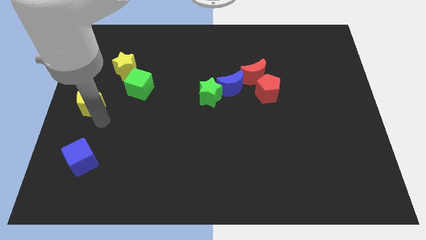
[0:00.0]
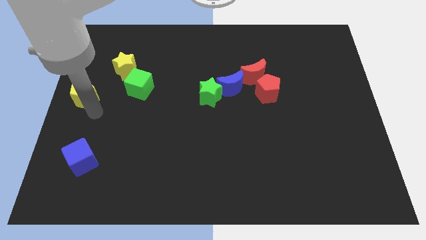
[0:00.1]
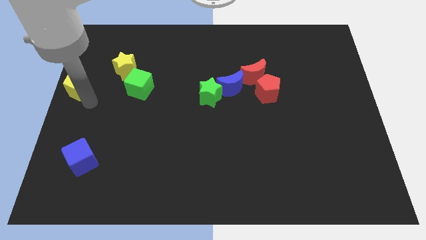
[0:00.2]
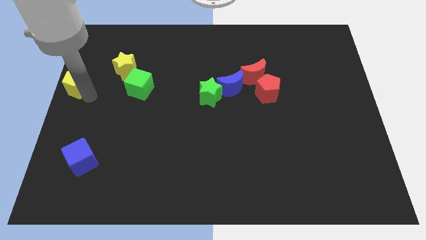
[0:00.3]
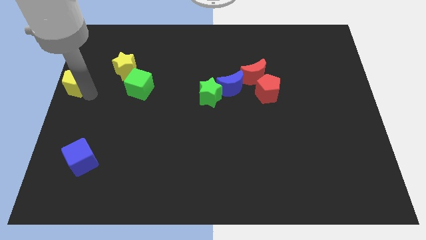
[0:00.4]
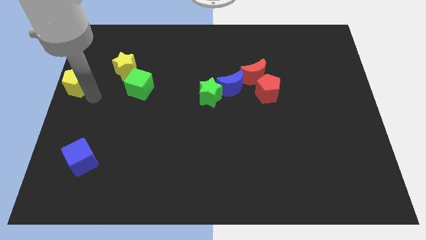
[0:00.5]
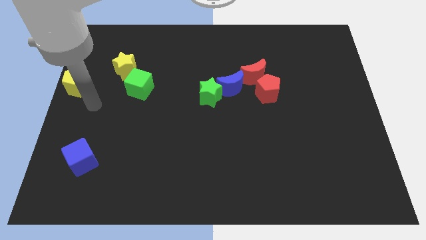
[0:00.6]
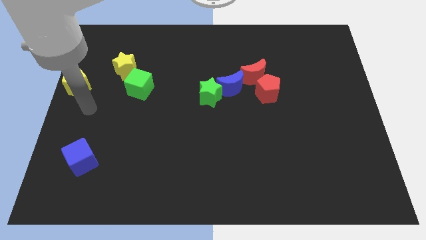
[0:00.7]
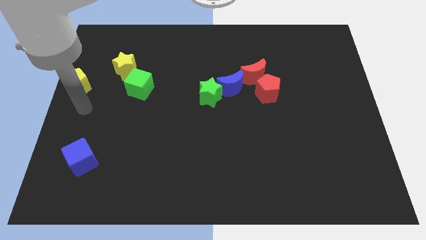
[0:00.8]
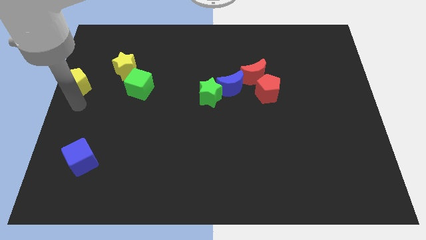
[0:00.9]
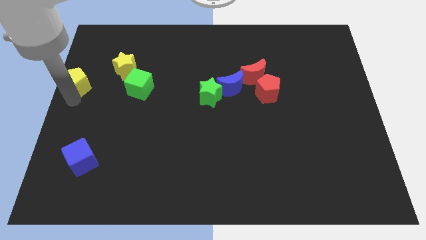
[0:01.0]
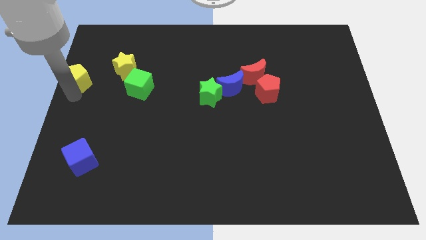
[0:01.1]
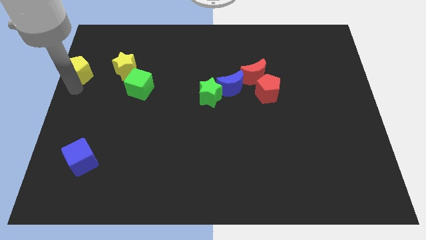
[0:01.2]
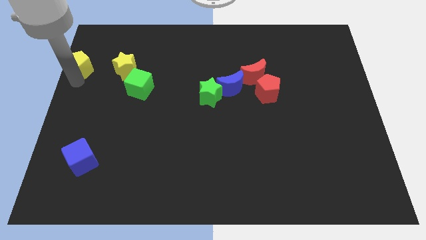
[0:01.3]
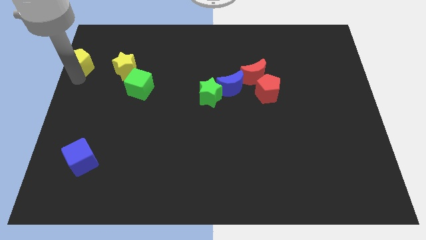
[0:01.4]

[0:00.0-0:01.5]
move yellow pentagon left beside the yellow star

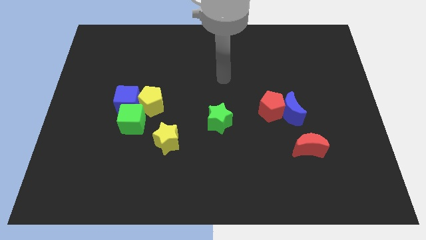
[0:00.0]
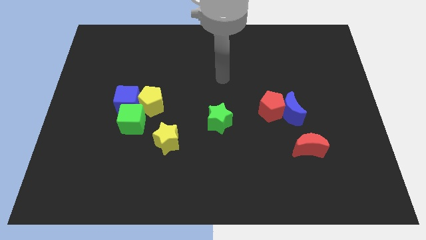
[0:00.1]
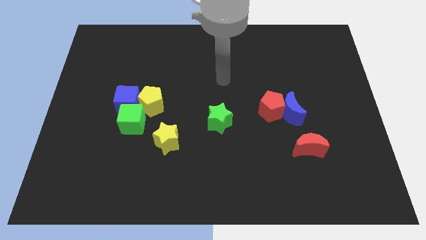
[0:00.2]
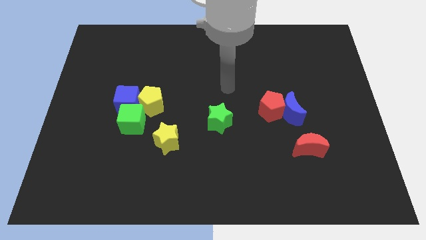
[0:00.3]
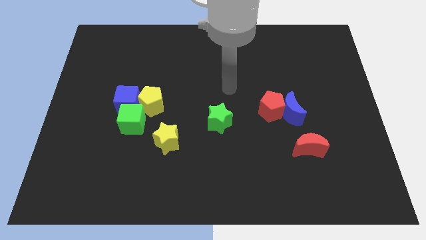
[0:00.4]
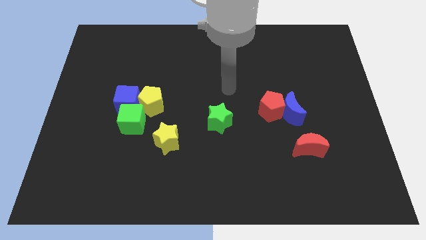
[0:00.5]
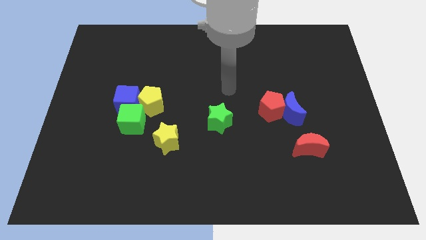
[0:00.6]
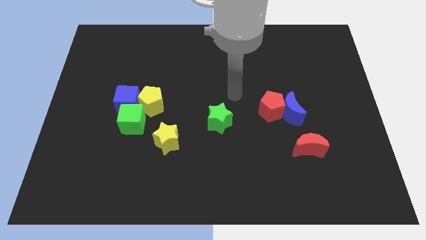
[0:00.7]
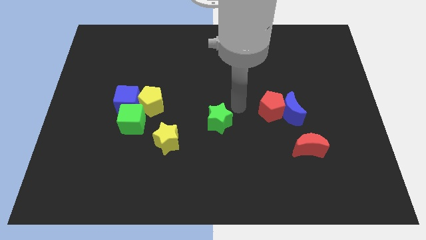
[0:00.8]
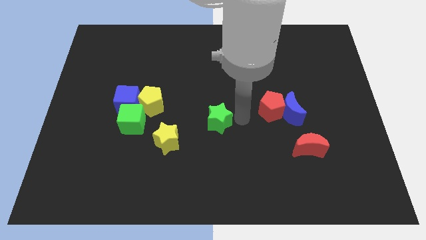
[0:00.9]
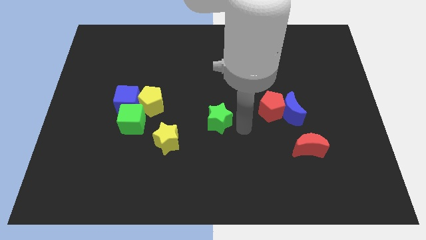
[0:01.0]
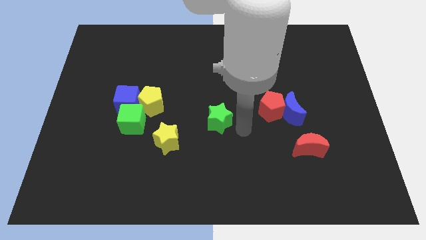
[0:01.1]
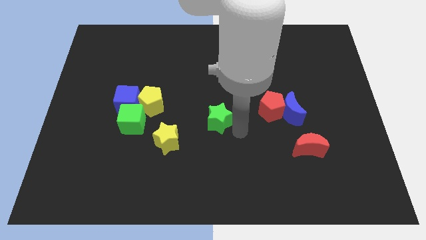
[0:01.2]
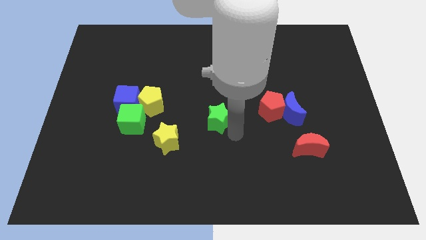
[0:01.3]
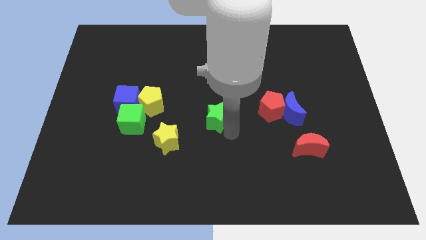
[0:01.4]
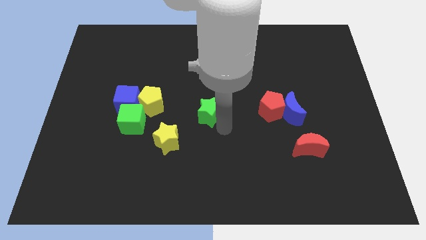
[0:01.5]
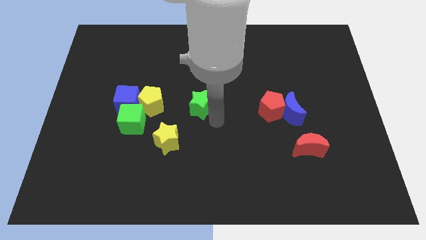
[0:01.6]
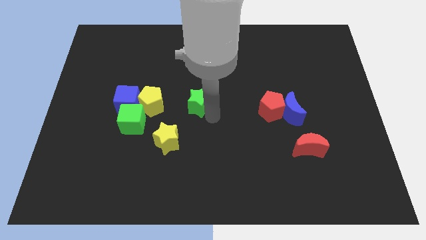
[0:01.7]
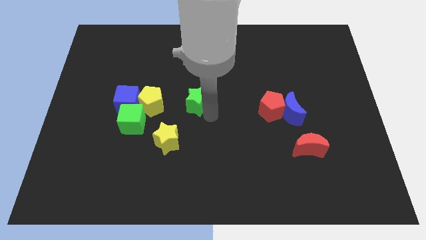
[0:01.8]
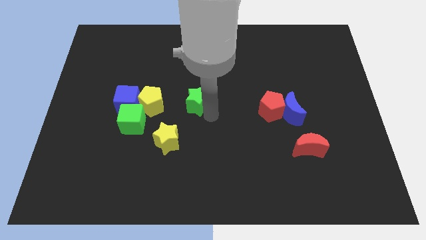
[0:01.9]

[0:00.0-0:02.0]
push the green star to the right of the yellow pentagon

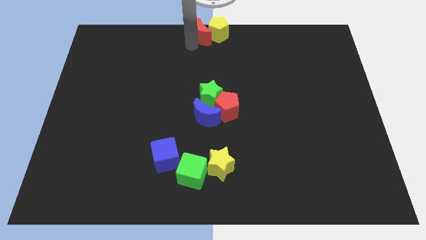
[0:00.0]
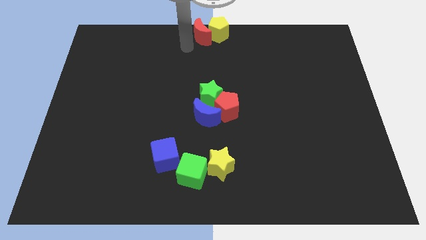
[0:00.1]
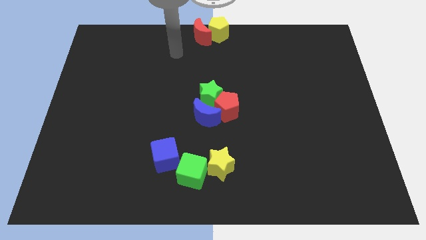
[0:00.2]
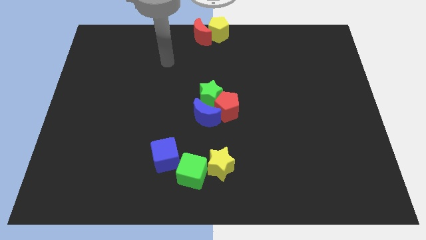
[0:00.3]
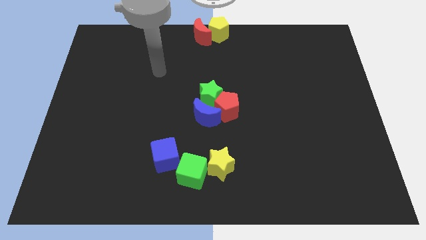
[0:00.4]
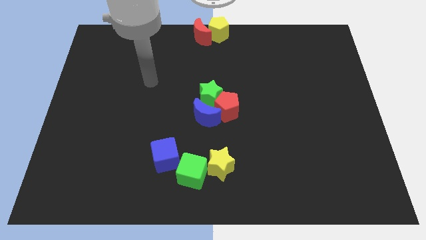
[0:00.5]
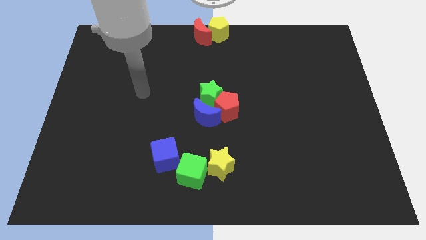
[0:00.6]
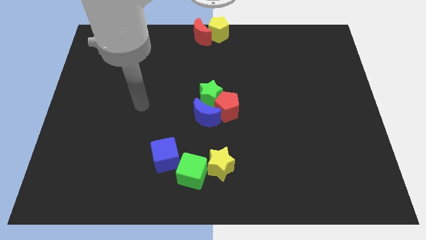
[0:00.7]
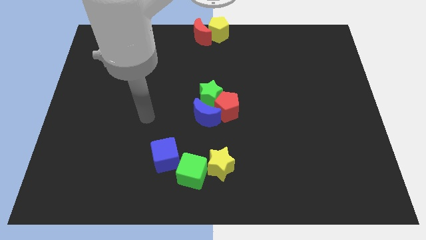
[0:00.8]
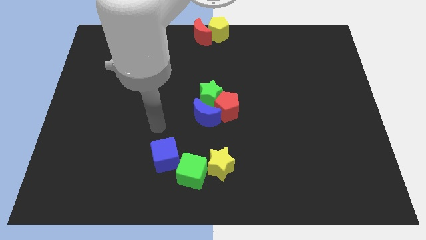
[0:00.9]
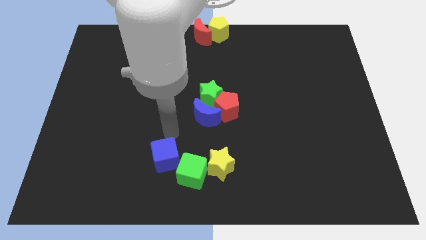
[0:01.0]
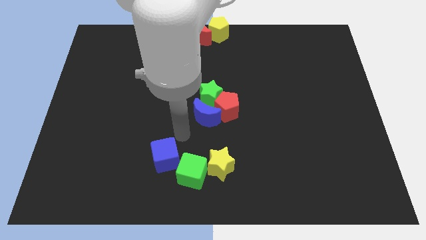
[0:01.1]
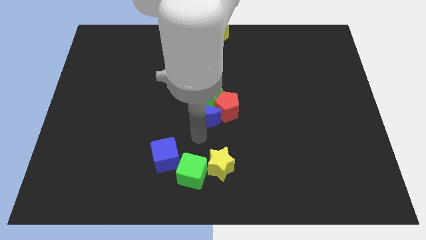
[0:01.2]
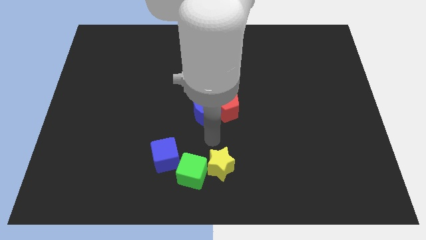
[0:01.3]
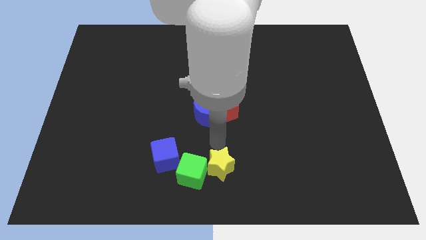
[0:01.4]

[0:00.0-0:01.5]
move your arm away from red moon

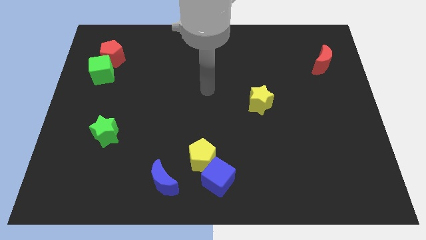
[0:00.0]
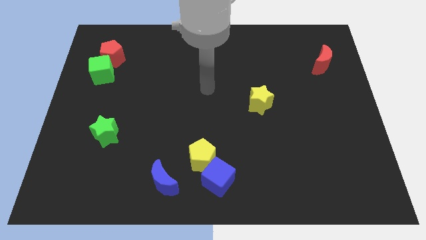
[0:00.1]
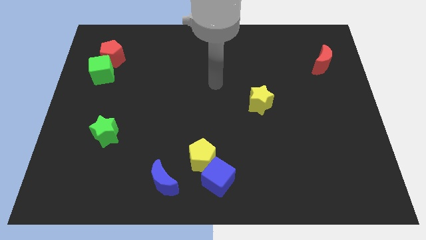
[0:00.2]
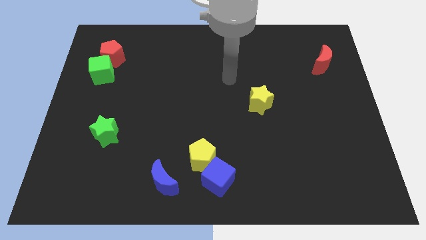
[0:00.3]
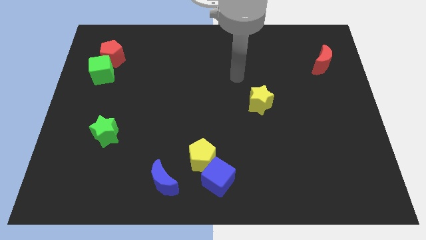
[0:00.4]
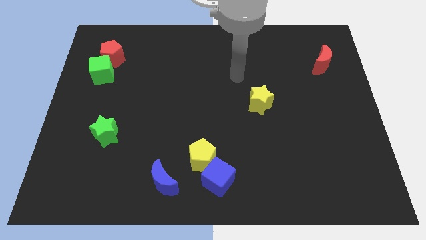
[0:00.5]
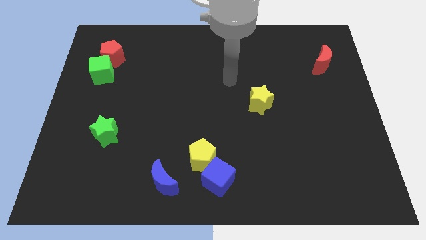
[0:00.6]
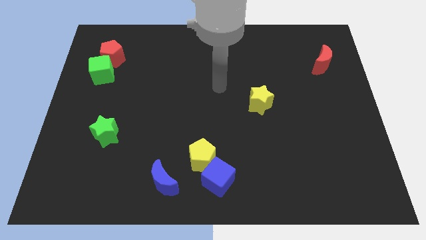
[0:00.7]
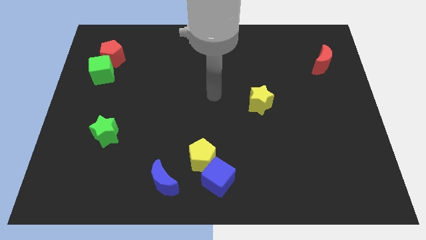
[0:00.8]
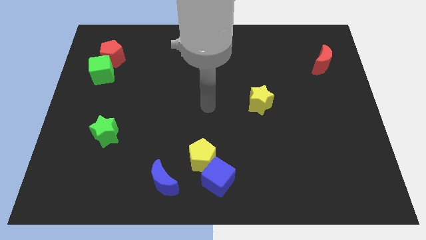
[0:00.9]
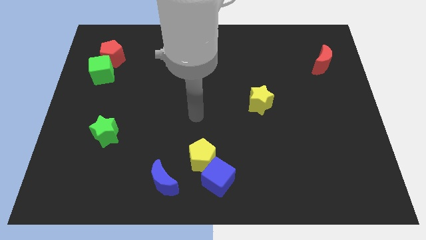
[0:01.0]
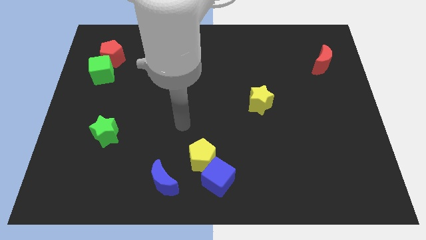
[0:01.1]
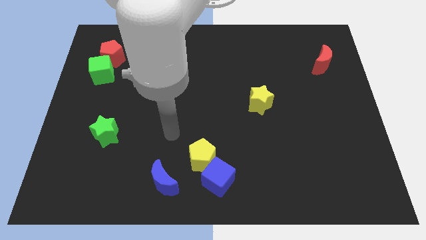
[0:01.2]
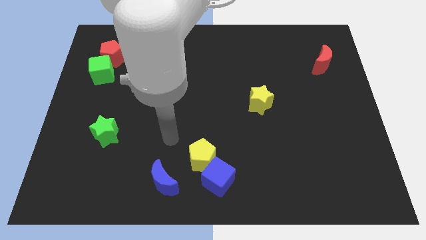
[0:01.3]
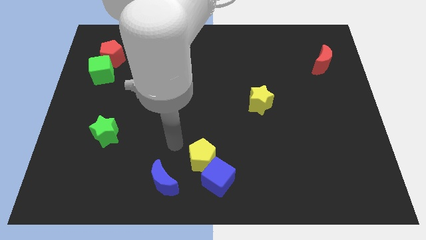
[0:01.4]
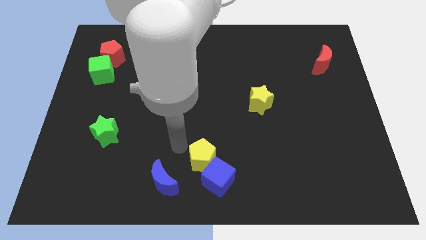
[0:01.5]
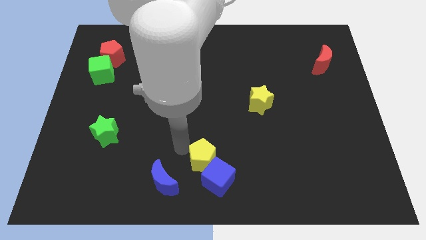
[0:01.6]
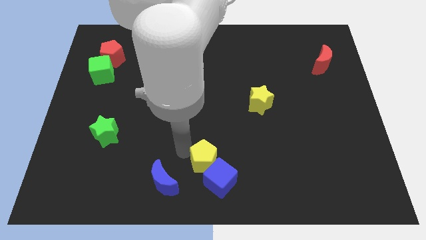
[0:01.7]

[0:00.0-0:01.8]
tap the yellow pentagon

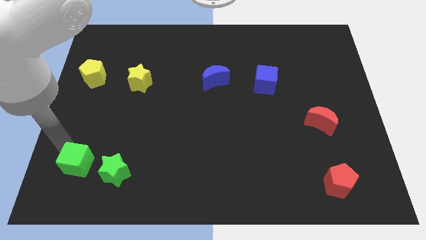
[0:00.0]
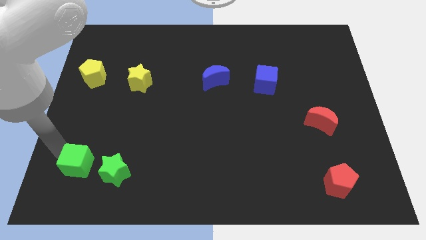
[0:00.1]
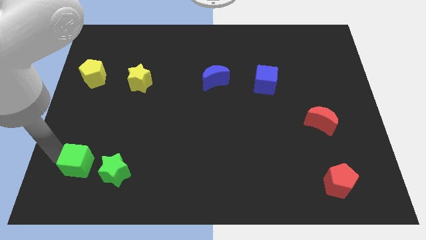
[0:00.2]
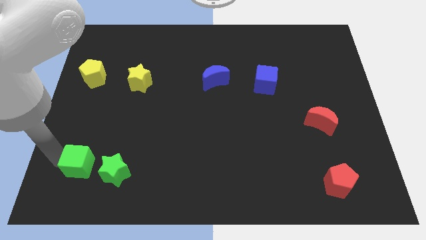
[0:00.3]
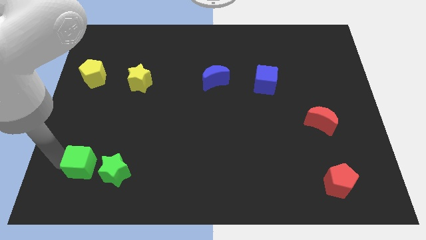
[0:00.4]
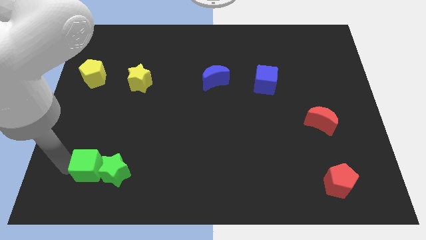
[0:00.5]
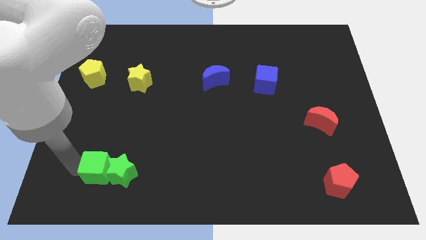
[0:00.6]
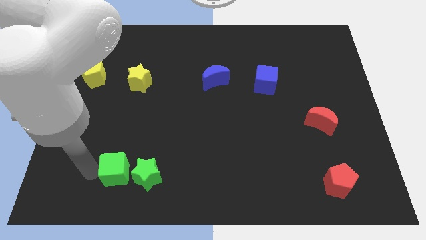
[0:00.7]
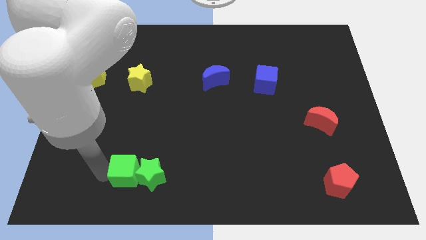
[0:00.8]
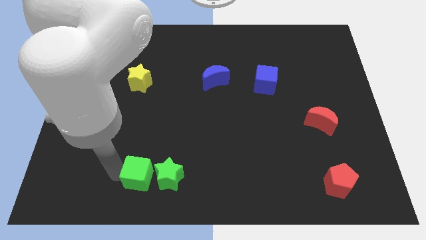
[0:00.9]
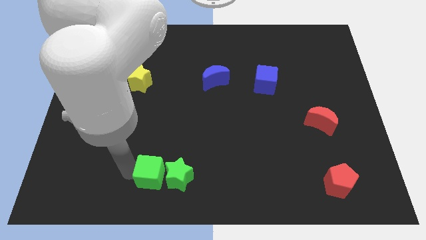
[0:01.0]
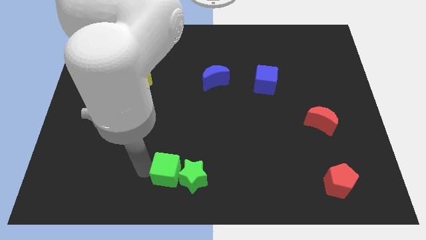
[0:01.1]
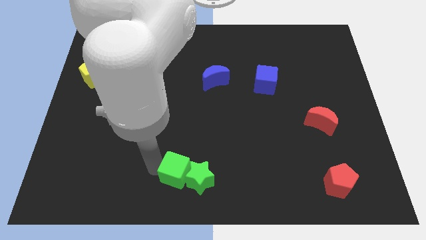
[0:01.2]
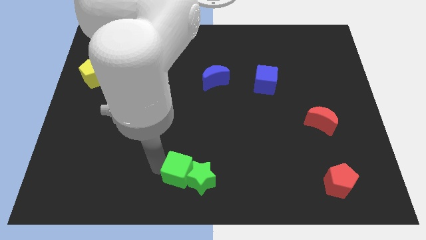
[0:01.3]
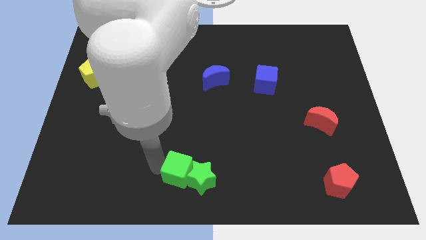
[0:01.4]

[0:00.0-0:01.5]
move green star along with green cube towards the bottom center

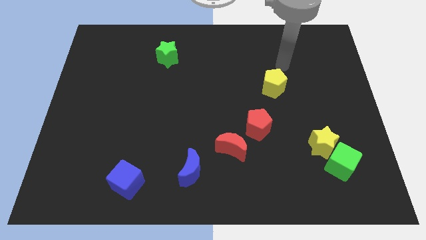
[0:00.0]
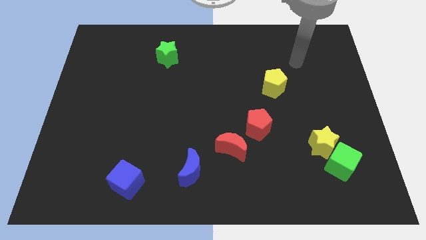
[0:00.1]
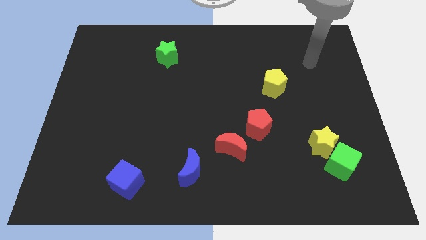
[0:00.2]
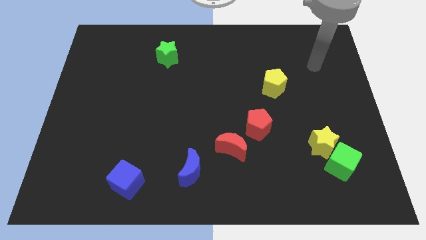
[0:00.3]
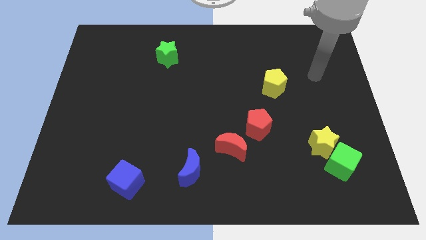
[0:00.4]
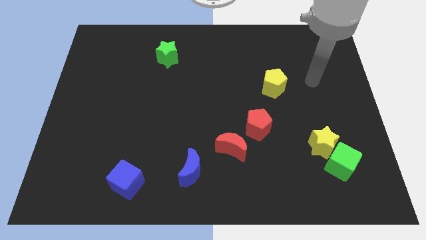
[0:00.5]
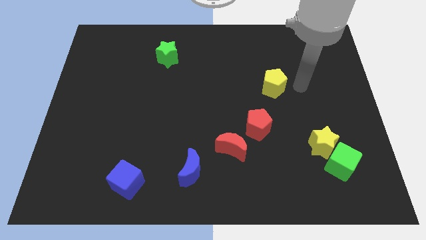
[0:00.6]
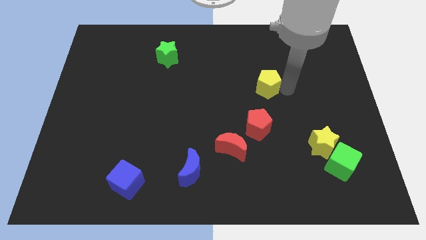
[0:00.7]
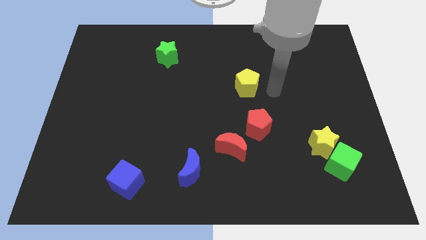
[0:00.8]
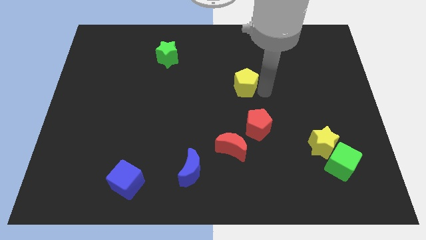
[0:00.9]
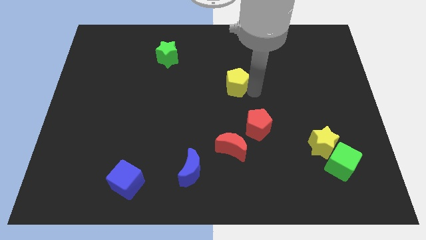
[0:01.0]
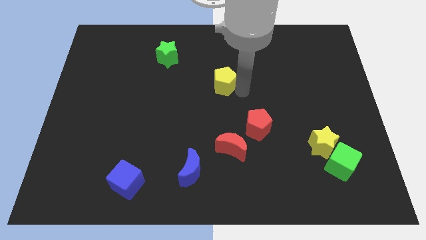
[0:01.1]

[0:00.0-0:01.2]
slide the yellow pentagon diagonally top left to the red pentagon
